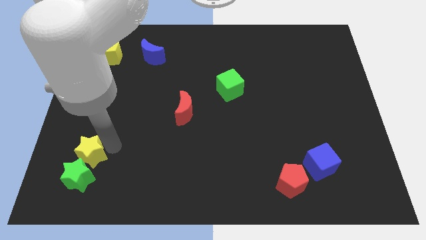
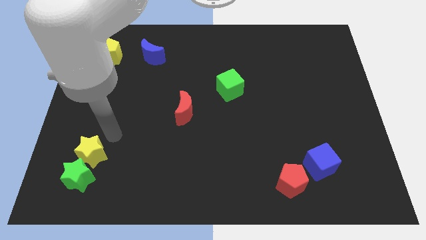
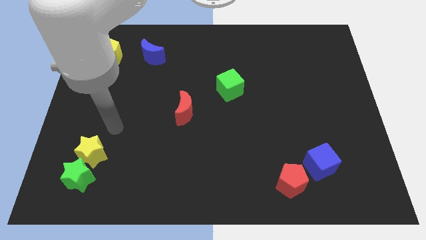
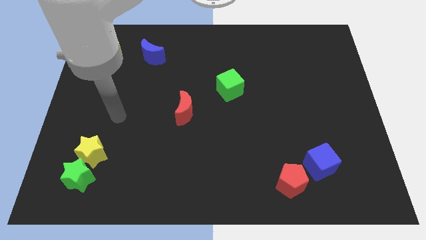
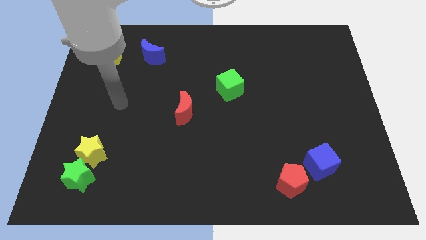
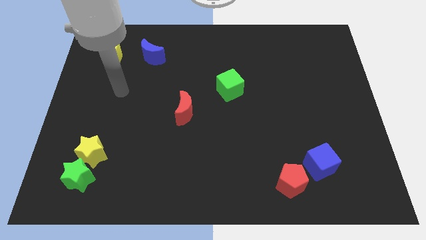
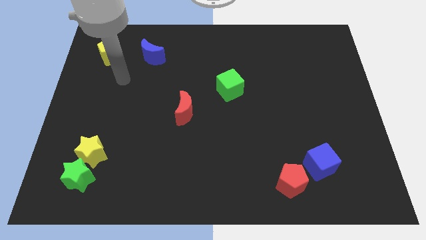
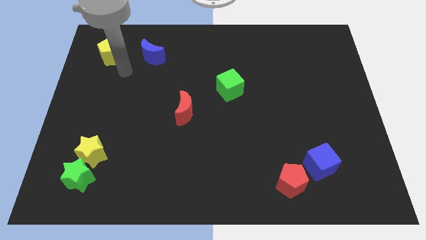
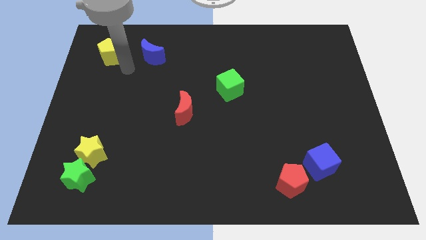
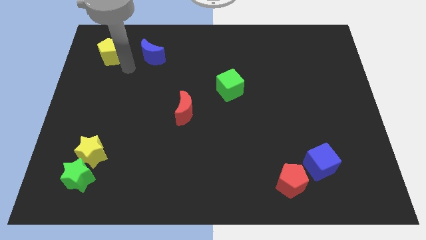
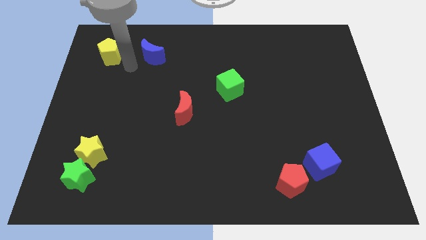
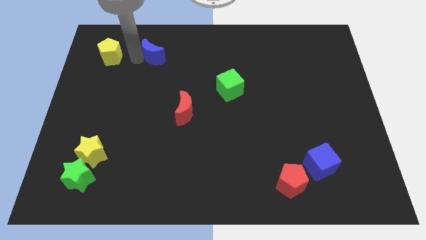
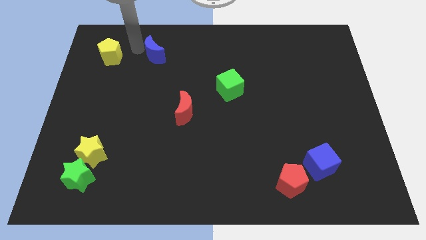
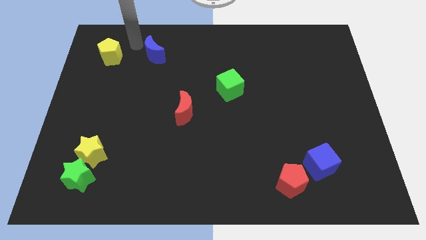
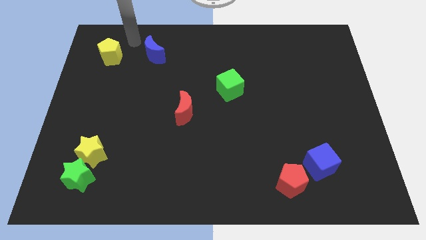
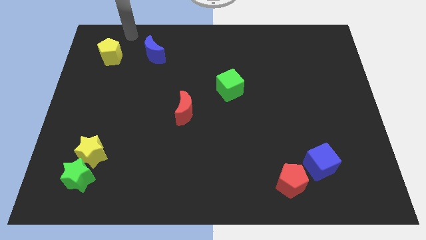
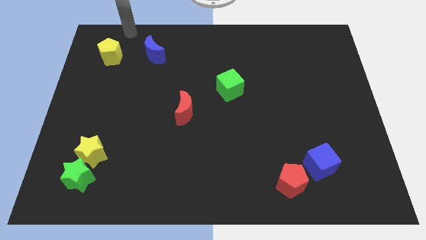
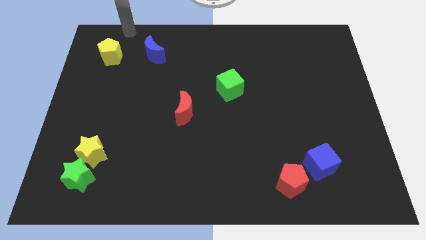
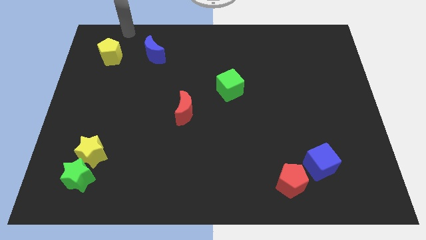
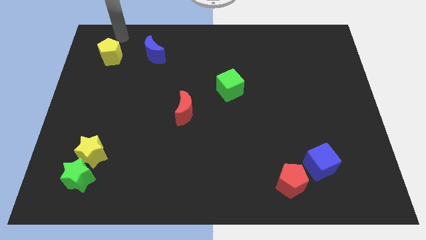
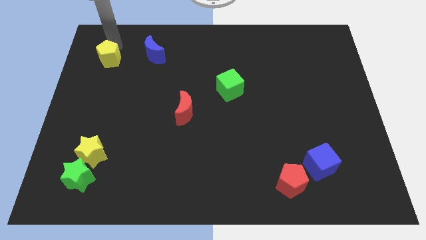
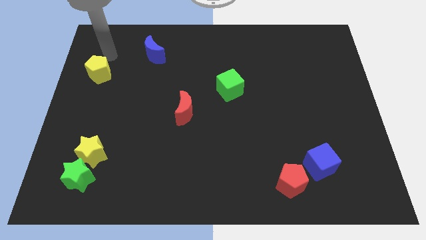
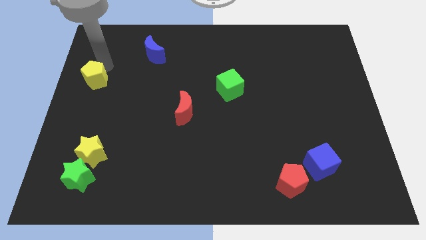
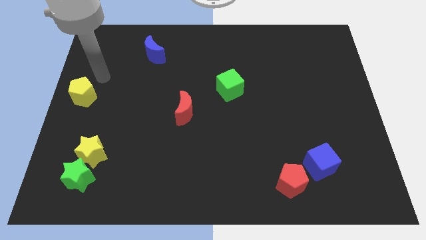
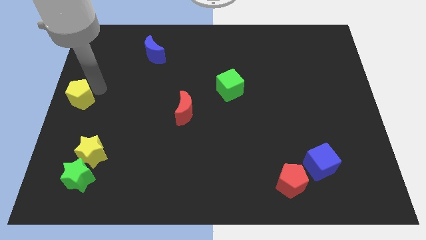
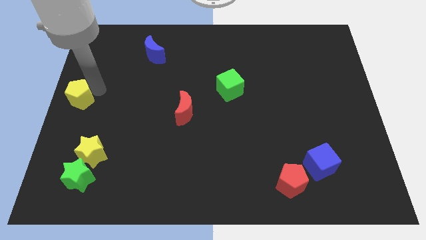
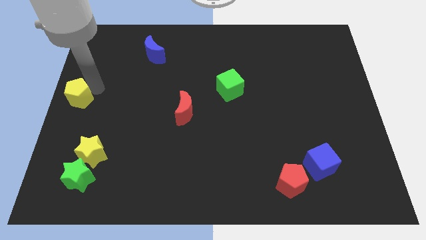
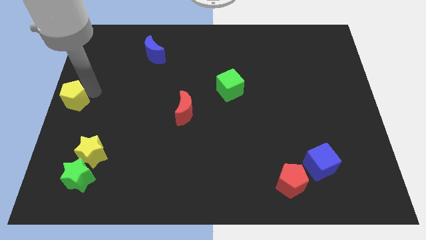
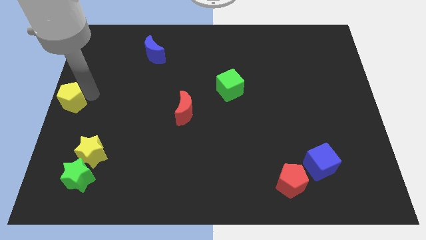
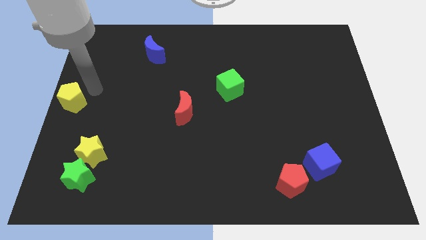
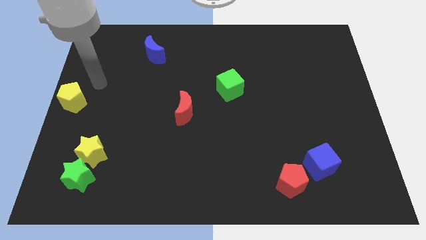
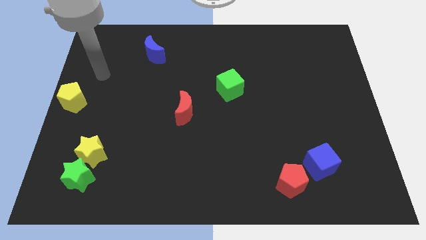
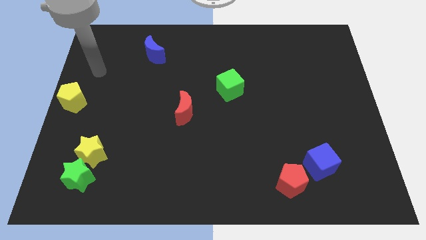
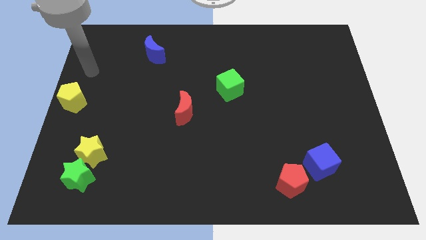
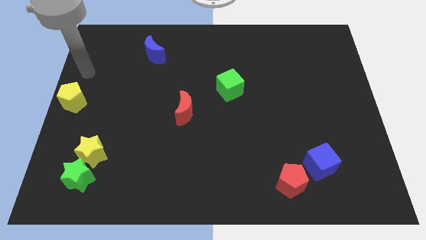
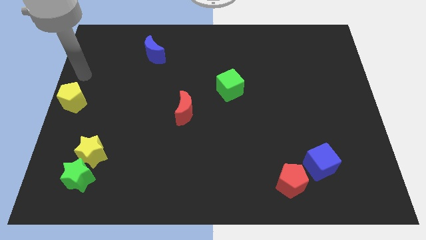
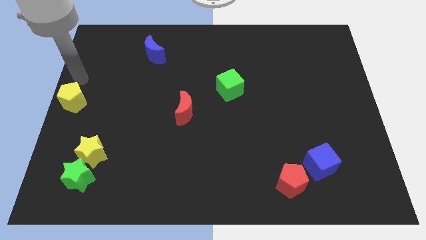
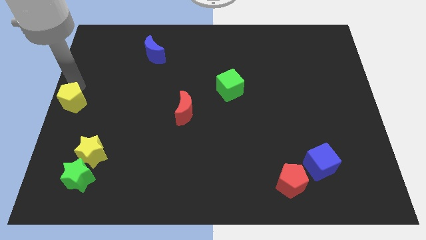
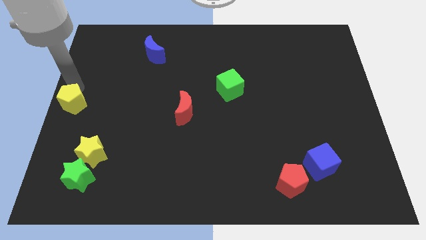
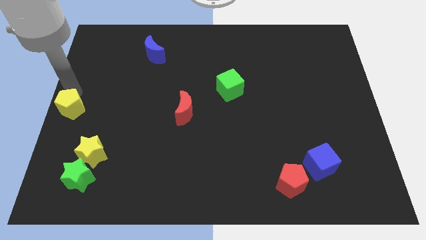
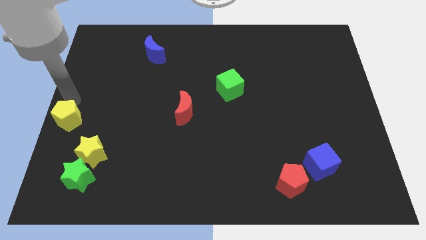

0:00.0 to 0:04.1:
move the yellow pentagon horizontal to the red moon

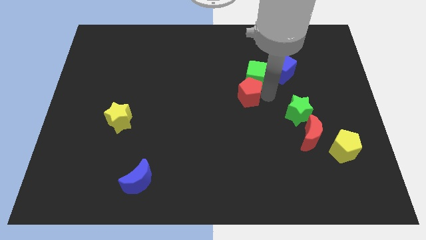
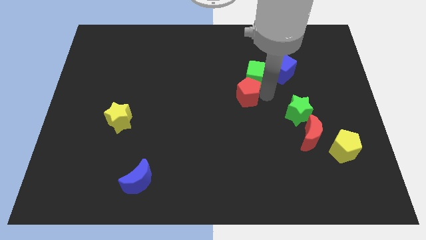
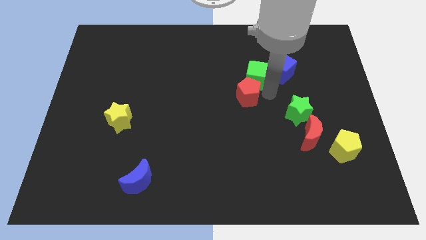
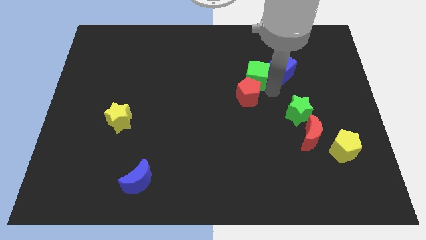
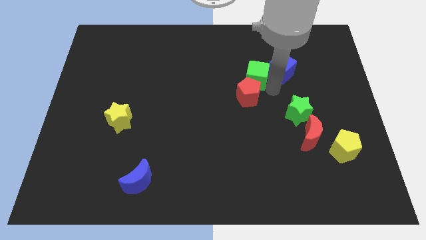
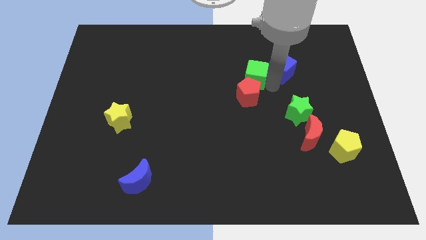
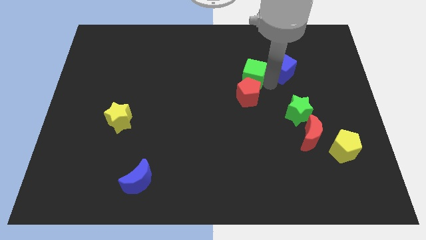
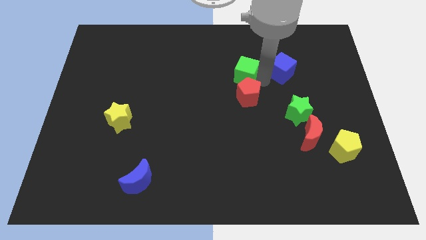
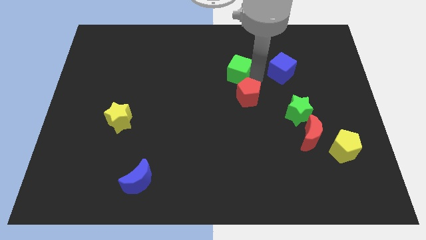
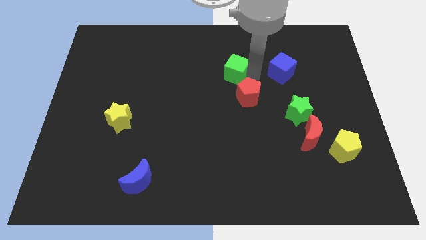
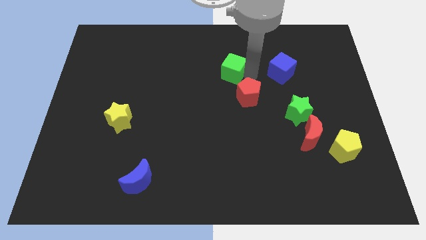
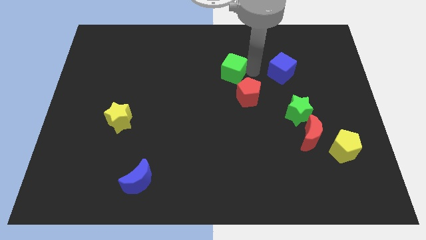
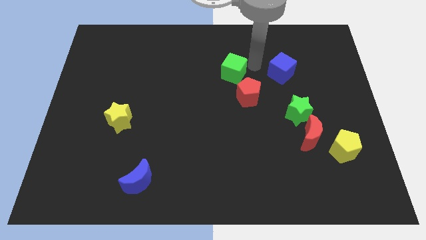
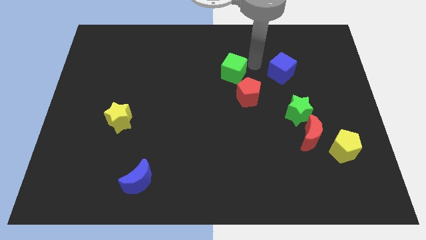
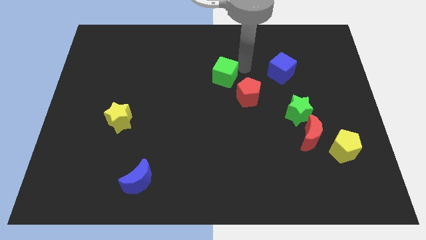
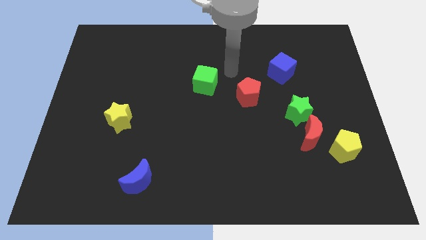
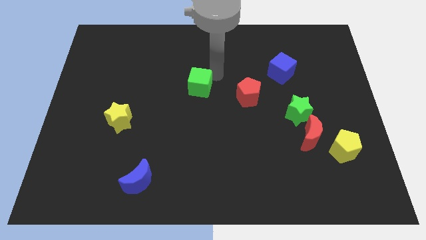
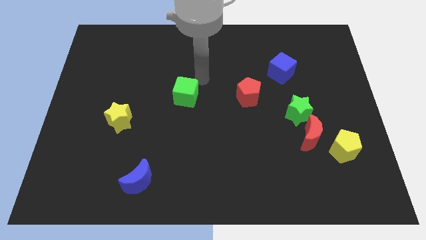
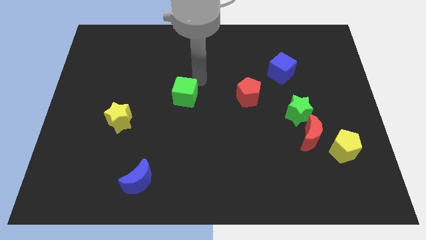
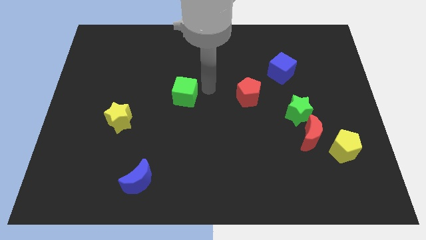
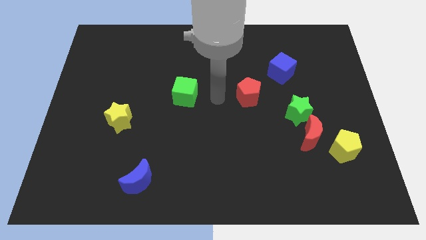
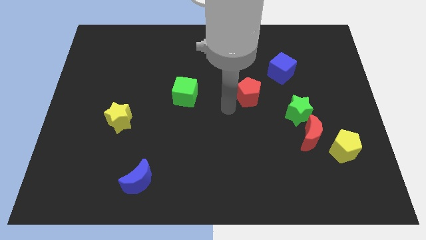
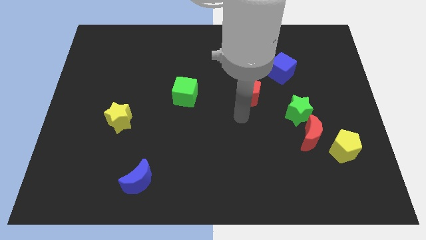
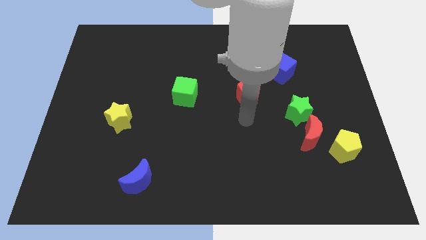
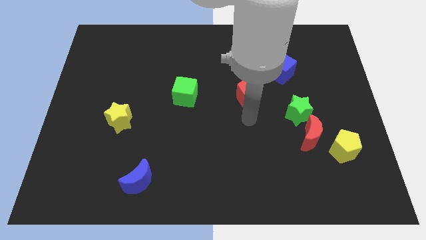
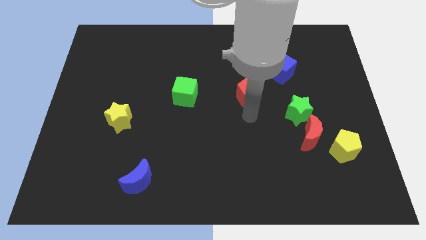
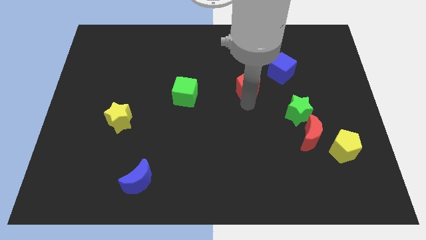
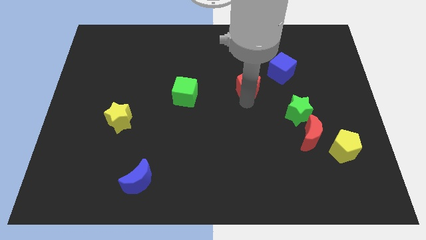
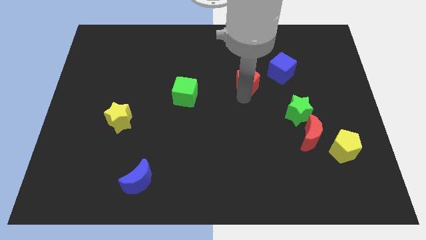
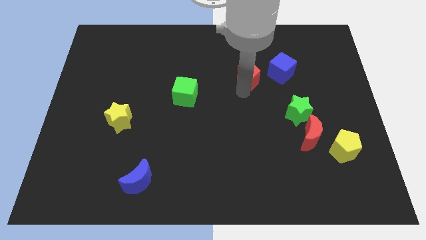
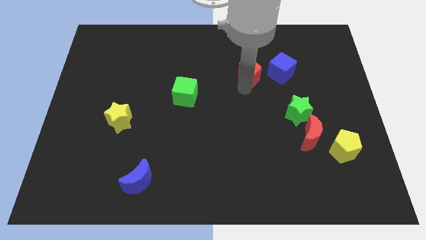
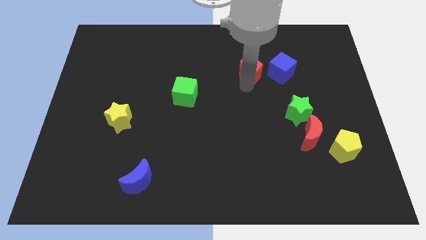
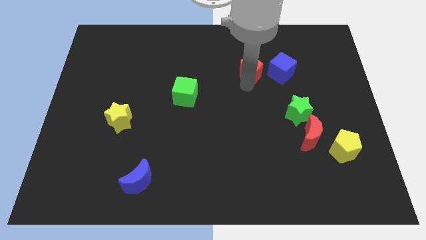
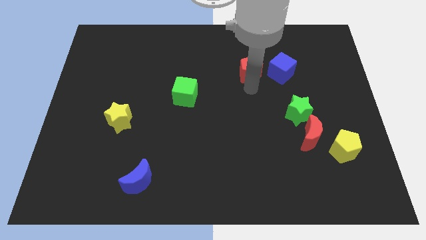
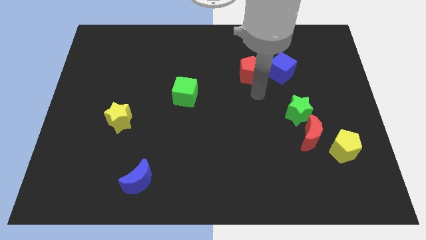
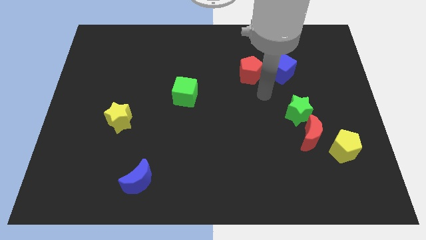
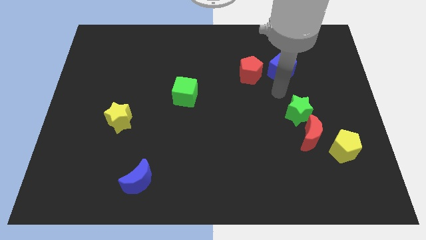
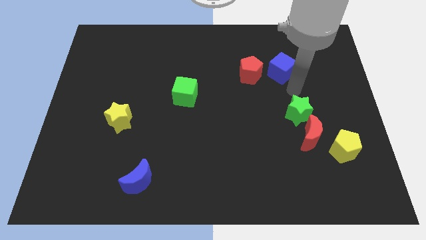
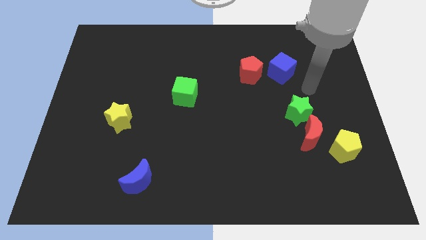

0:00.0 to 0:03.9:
drag the red pentagon towards the blue cube

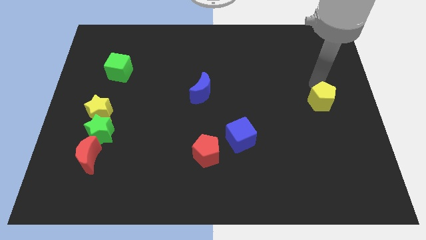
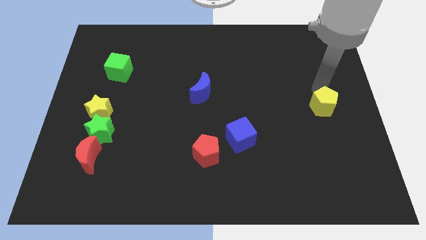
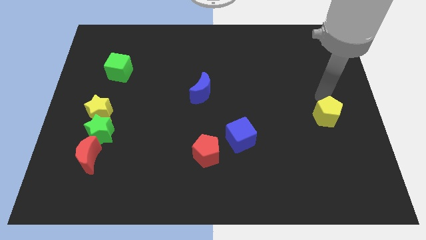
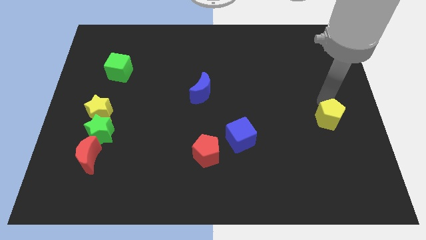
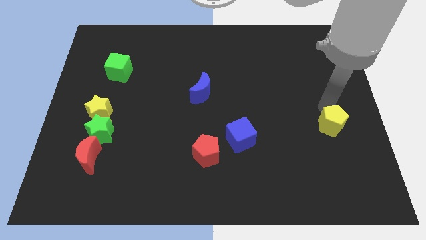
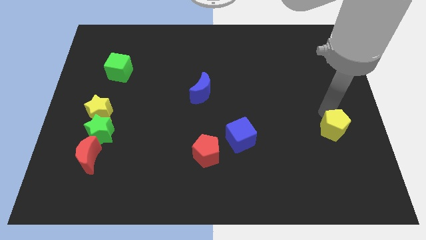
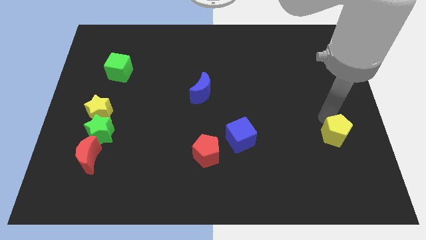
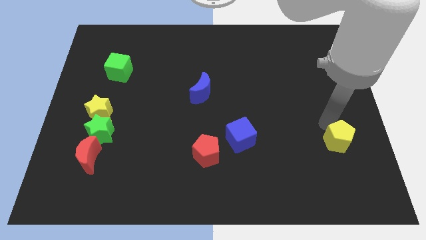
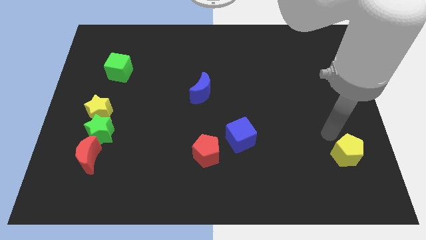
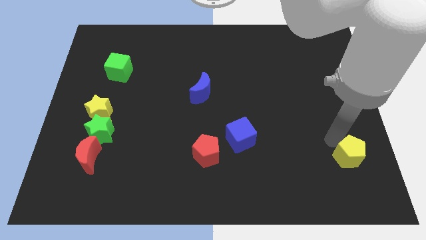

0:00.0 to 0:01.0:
push yellow pentagon towards the bottom of board

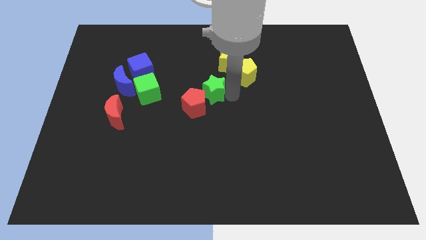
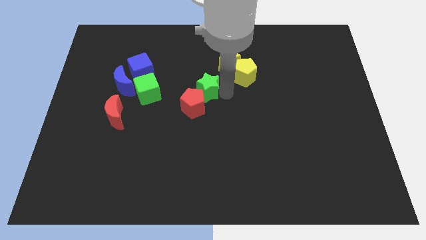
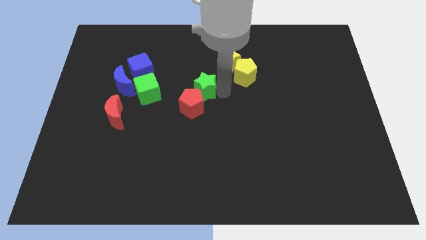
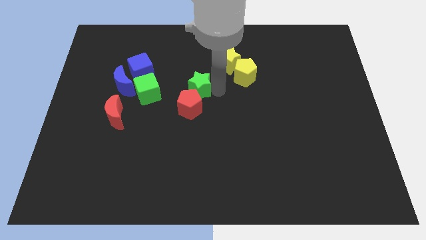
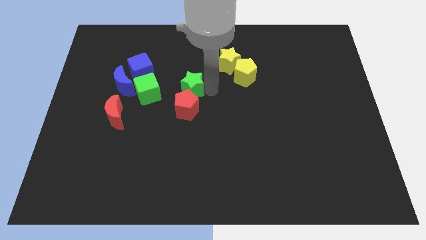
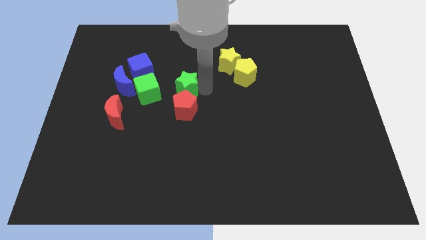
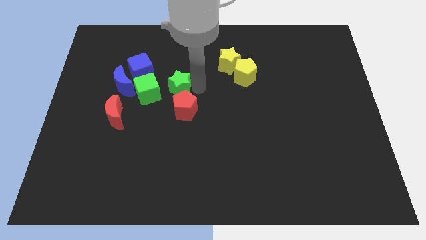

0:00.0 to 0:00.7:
slightly push the green star and red pentagon towards the left side of the board
